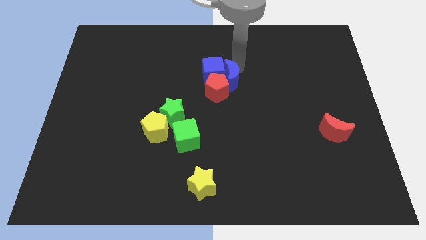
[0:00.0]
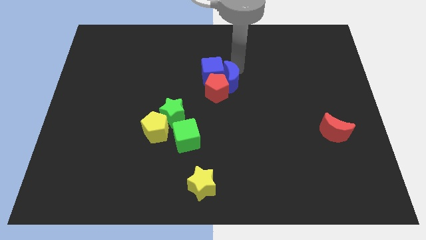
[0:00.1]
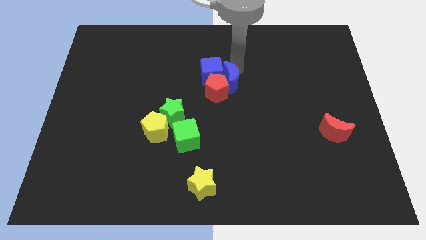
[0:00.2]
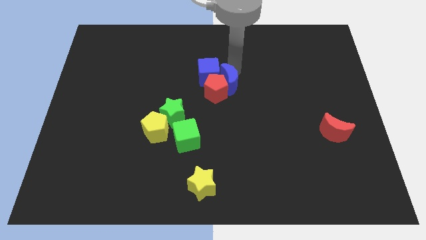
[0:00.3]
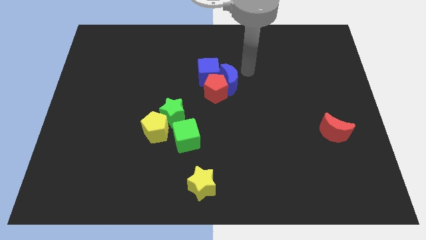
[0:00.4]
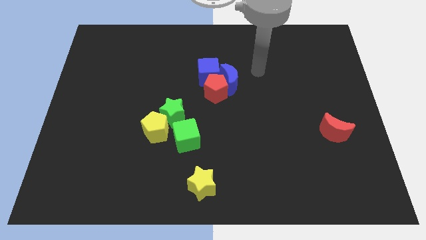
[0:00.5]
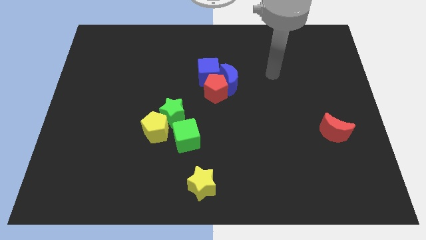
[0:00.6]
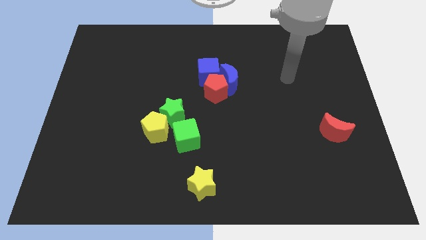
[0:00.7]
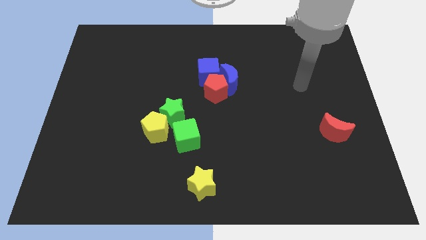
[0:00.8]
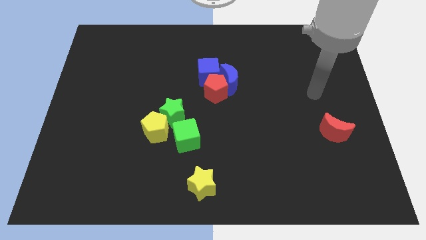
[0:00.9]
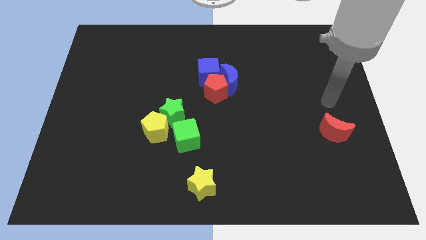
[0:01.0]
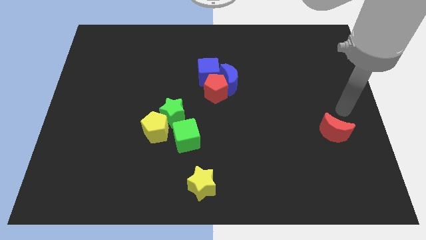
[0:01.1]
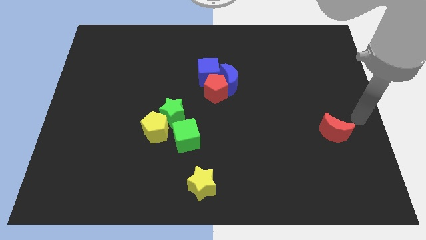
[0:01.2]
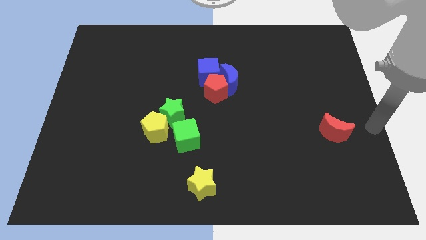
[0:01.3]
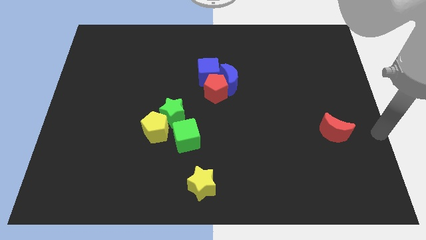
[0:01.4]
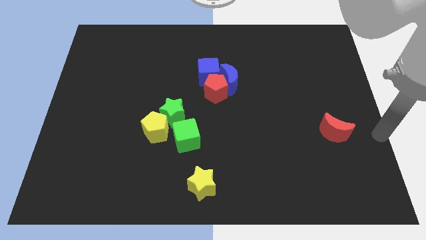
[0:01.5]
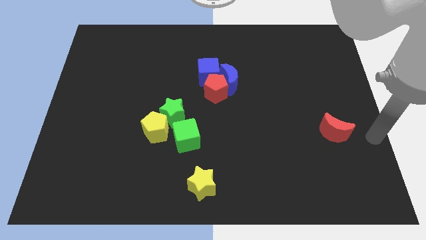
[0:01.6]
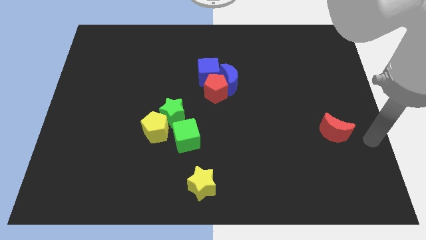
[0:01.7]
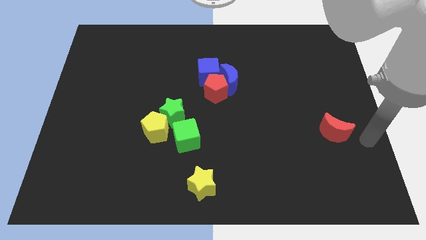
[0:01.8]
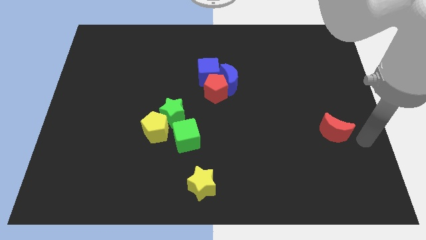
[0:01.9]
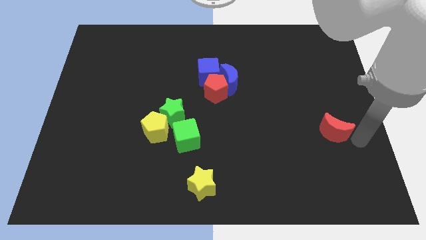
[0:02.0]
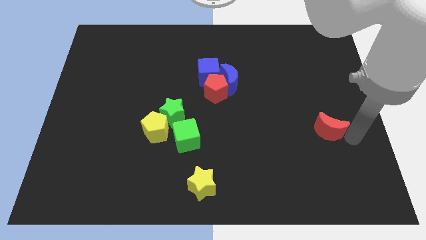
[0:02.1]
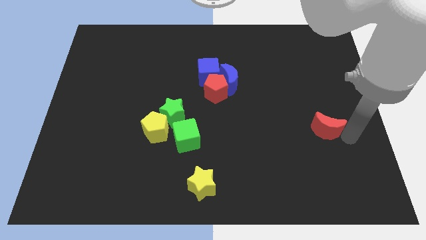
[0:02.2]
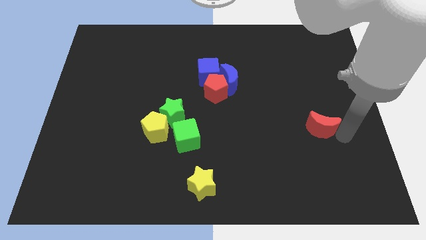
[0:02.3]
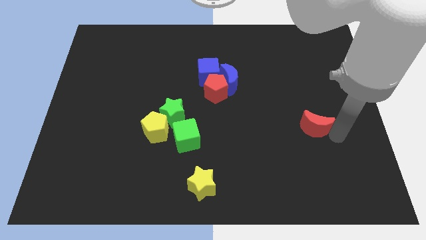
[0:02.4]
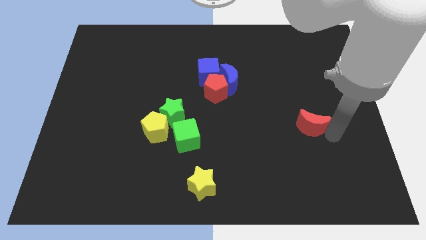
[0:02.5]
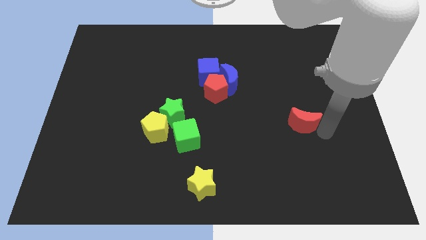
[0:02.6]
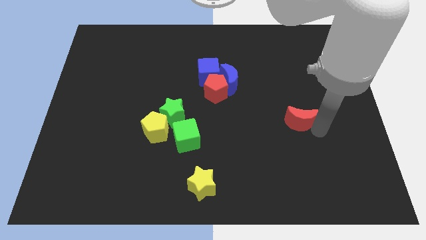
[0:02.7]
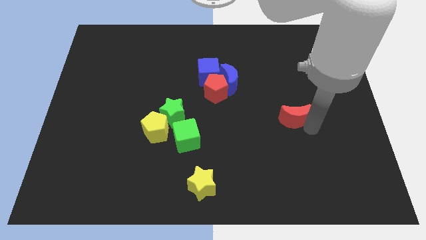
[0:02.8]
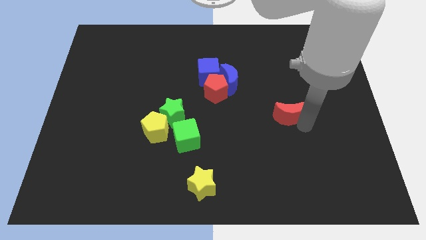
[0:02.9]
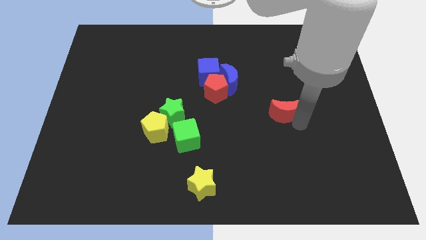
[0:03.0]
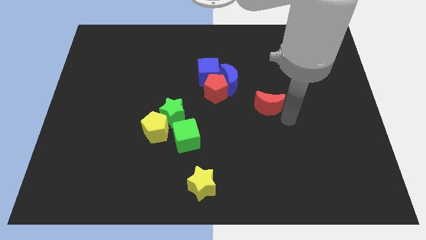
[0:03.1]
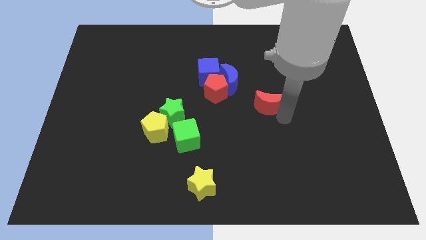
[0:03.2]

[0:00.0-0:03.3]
place red moon parallel to green star

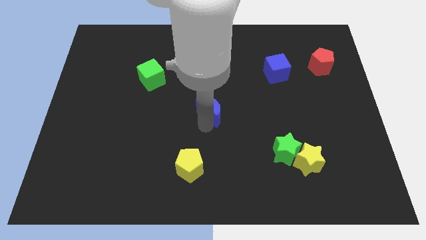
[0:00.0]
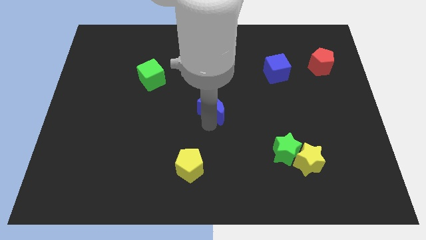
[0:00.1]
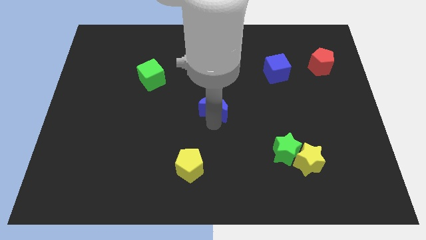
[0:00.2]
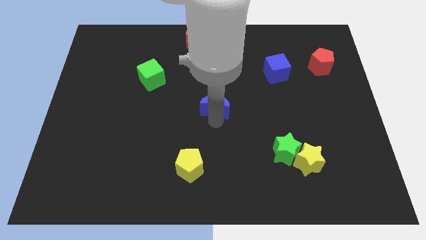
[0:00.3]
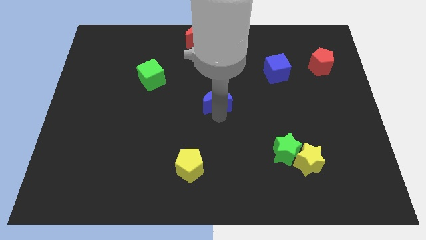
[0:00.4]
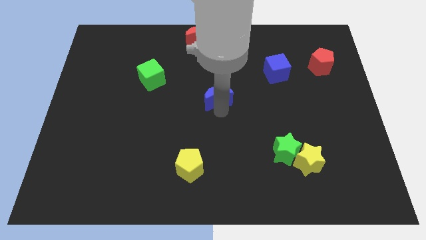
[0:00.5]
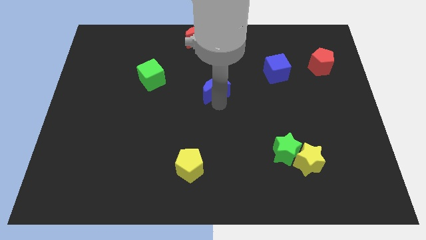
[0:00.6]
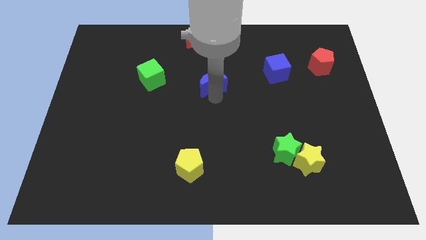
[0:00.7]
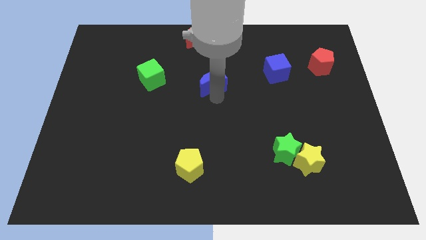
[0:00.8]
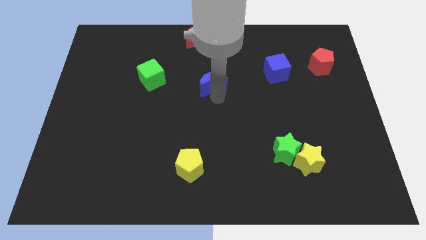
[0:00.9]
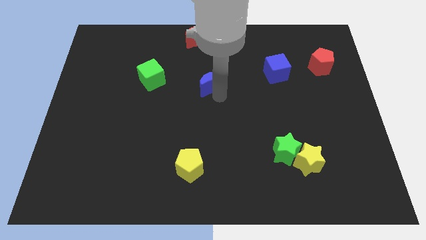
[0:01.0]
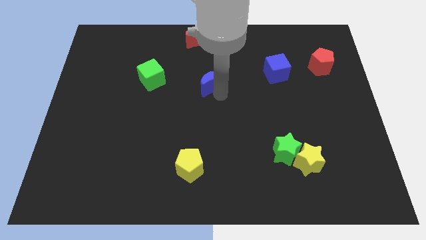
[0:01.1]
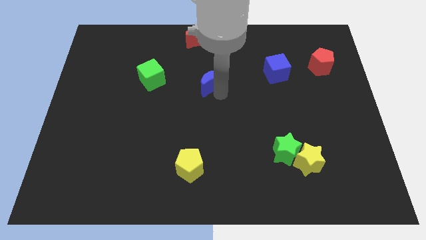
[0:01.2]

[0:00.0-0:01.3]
push the blue crescent to the right of the green cube

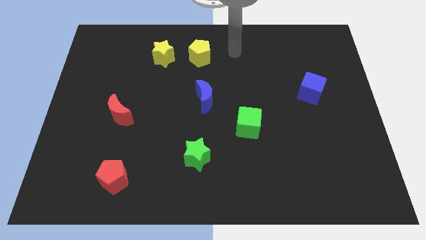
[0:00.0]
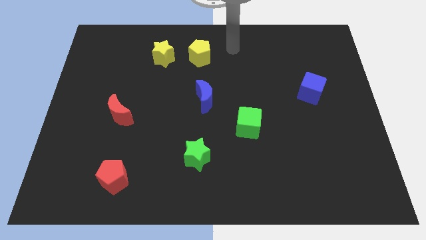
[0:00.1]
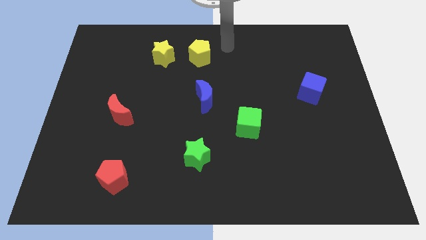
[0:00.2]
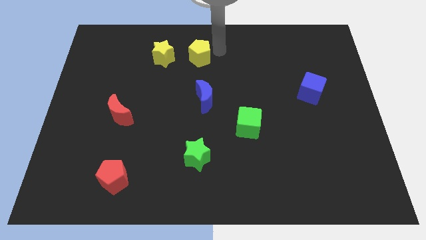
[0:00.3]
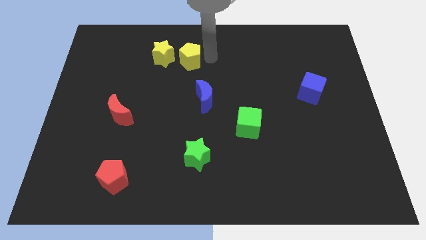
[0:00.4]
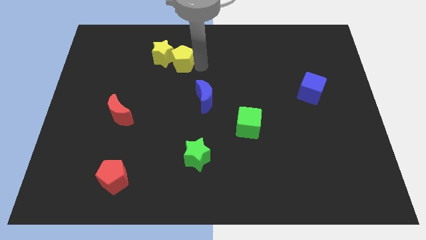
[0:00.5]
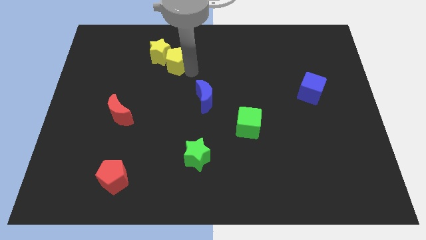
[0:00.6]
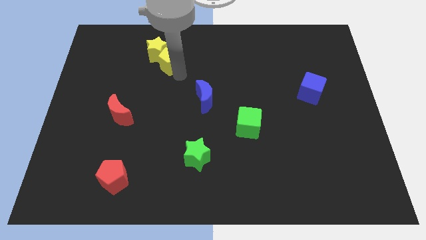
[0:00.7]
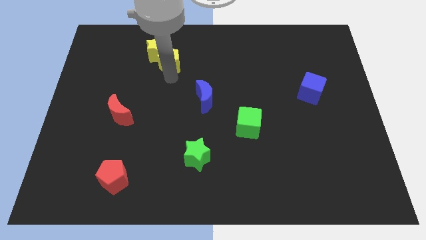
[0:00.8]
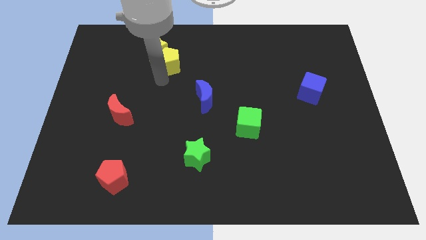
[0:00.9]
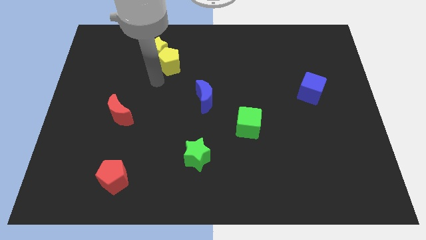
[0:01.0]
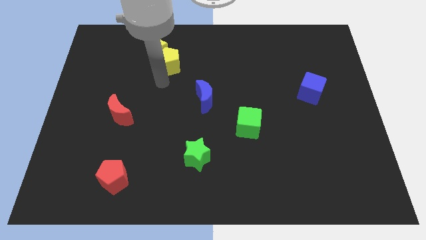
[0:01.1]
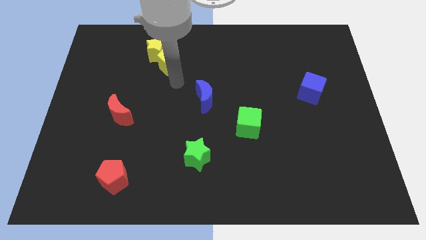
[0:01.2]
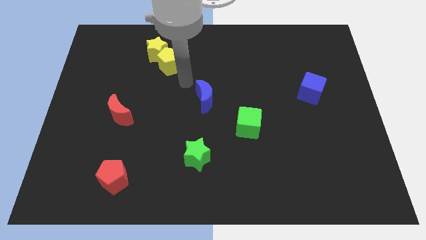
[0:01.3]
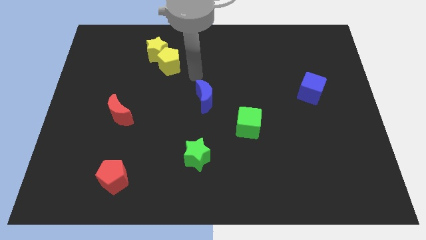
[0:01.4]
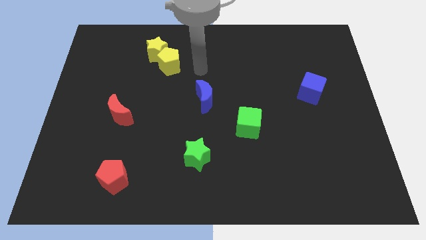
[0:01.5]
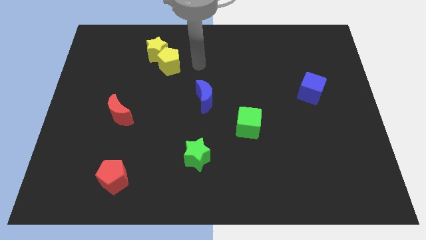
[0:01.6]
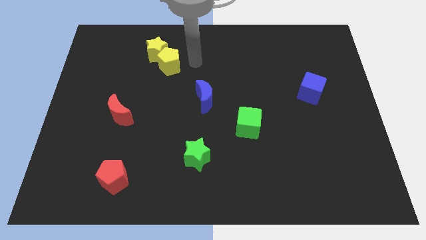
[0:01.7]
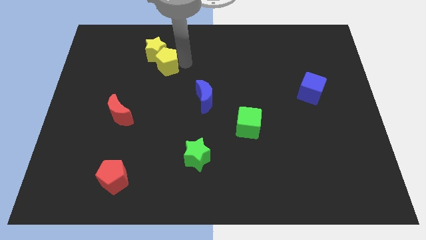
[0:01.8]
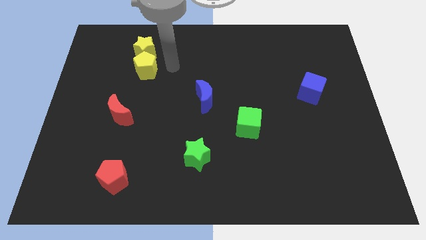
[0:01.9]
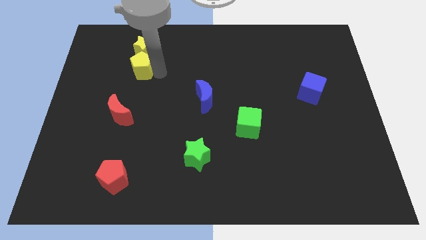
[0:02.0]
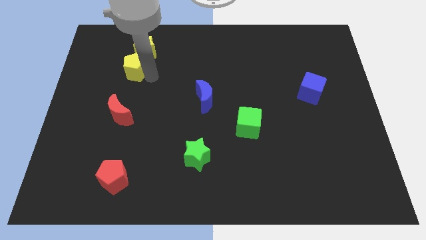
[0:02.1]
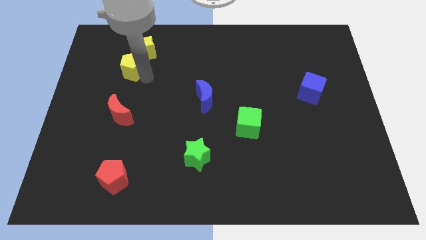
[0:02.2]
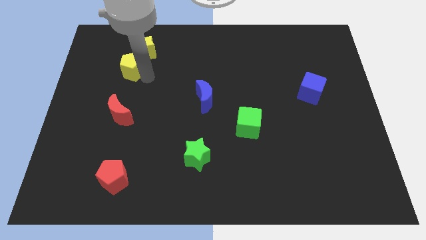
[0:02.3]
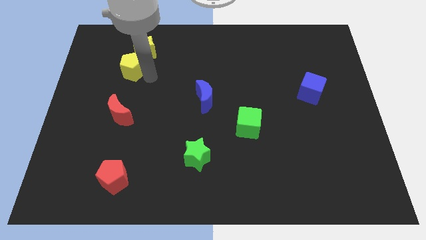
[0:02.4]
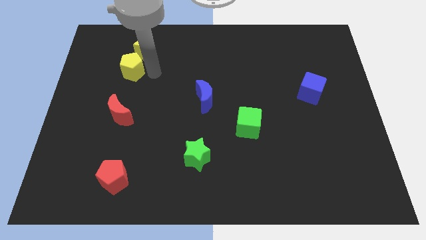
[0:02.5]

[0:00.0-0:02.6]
place the yellow star and yellow pentagon together above the red moon

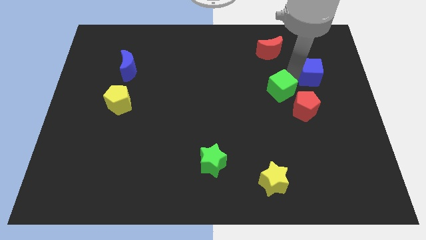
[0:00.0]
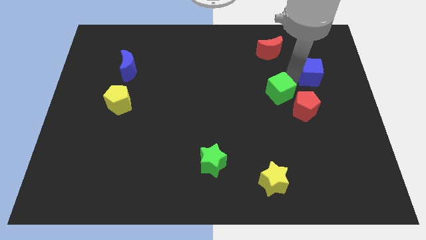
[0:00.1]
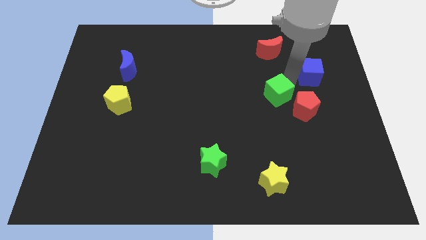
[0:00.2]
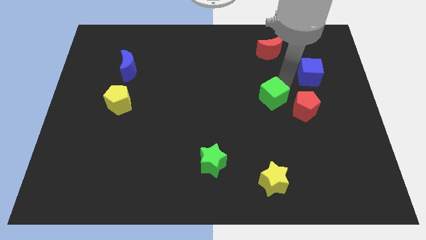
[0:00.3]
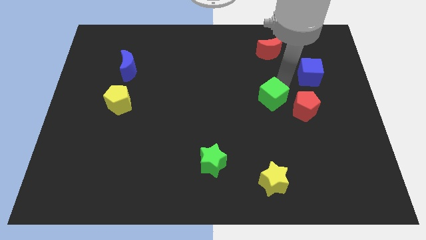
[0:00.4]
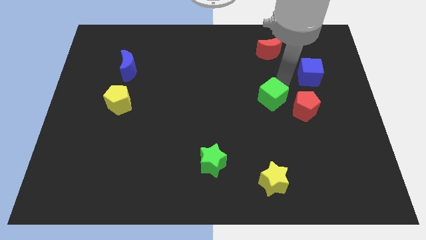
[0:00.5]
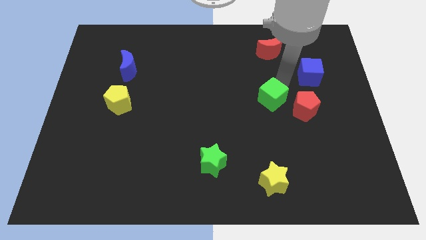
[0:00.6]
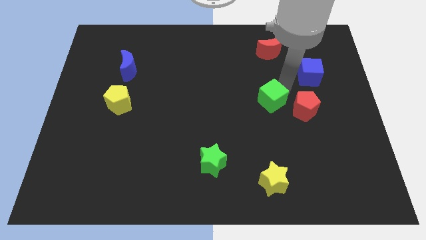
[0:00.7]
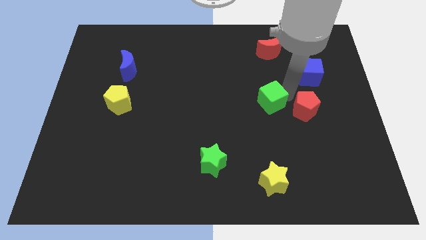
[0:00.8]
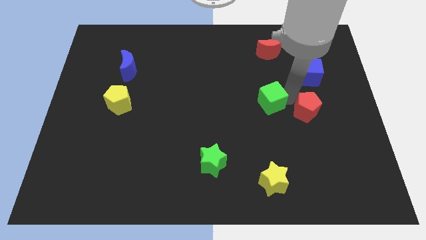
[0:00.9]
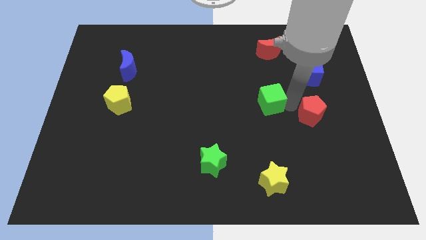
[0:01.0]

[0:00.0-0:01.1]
separate green cube from blue cube

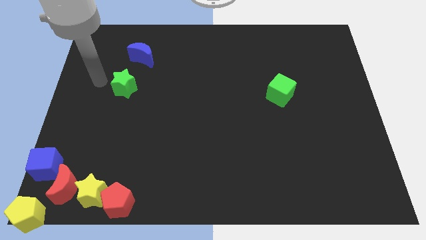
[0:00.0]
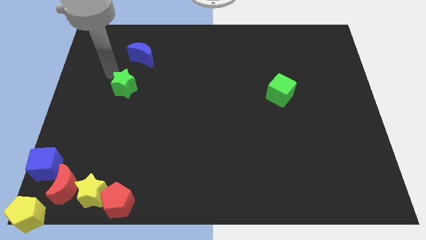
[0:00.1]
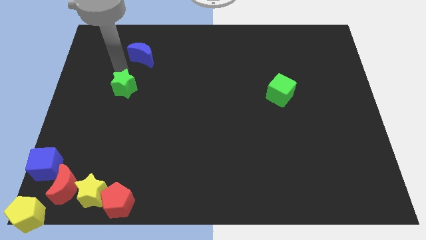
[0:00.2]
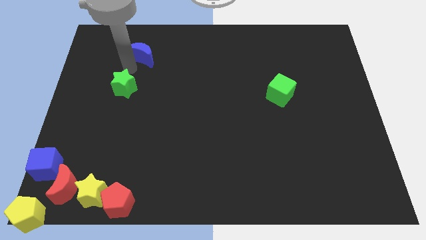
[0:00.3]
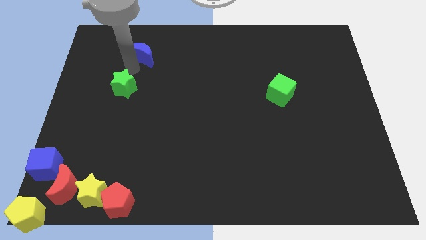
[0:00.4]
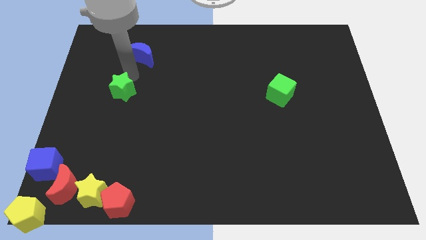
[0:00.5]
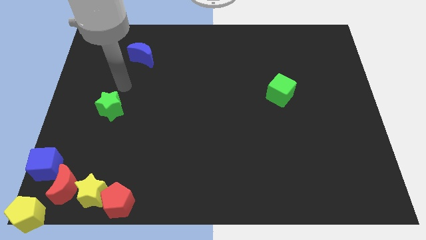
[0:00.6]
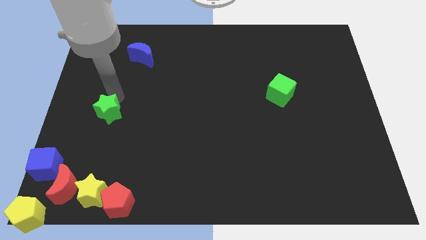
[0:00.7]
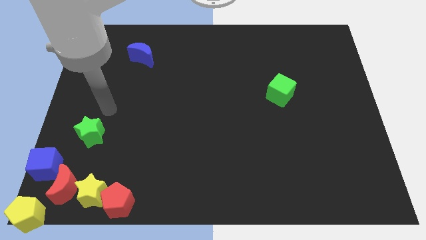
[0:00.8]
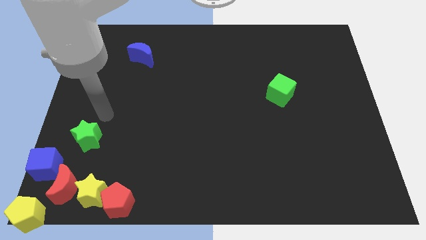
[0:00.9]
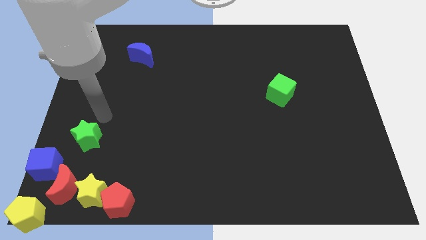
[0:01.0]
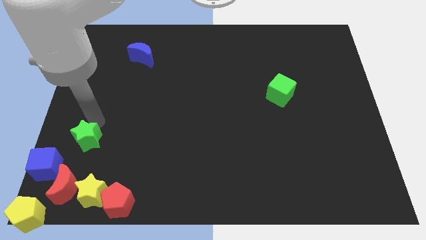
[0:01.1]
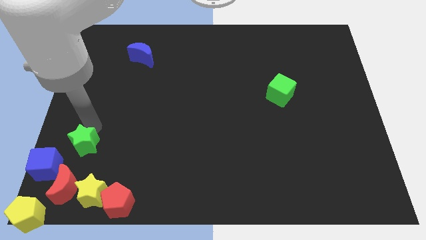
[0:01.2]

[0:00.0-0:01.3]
place green star at the top of red moon
